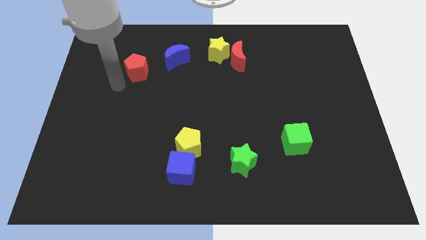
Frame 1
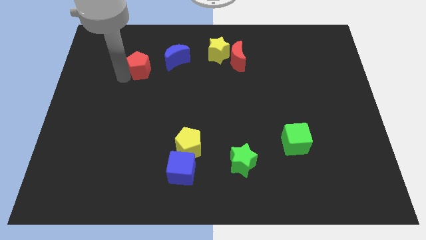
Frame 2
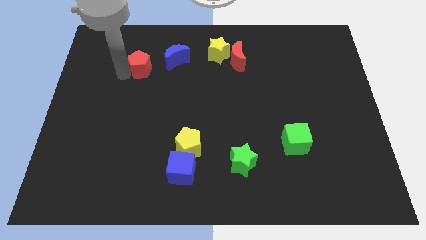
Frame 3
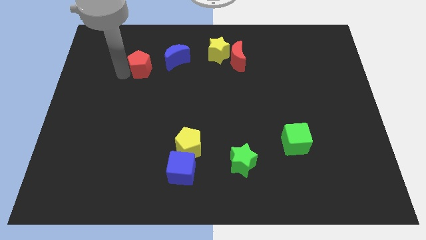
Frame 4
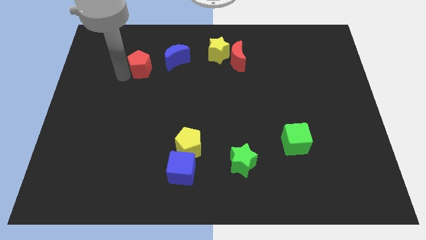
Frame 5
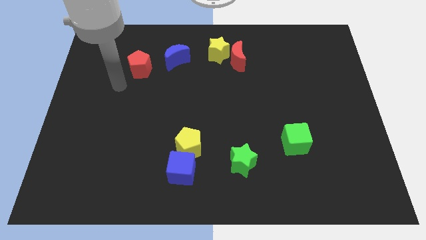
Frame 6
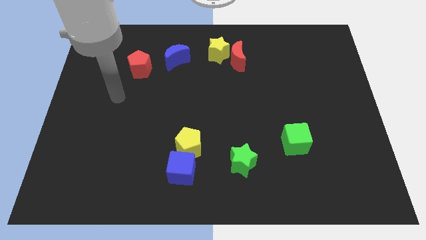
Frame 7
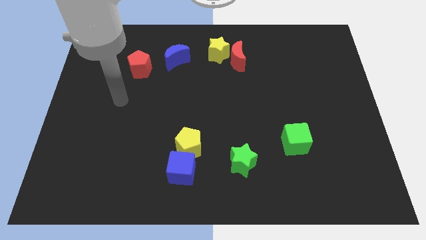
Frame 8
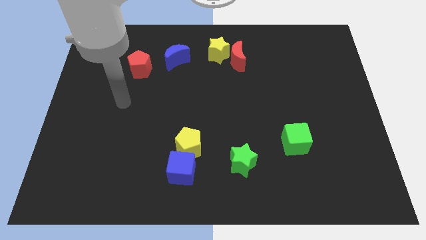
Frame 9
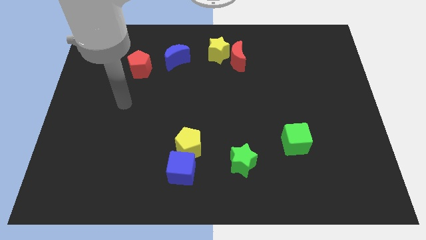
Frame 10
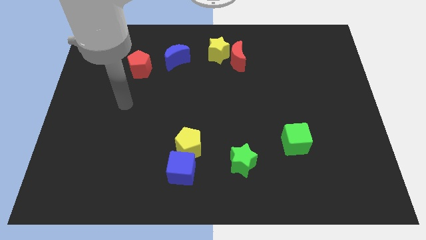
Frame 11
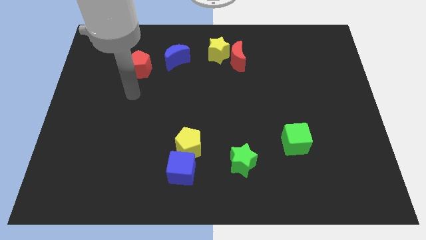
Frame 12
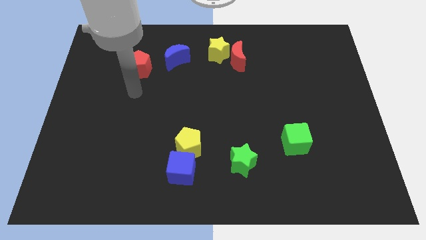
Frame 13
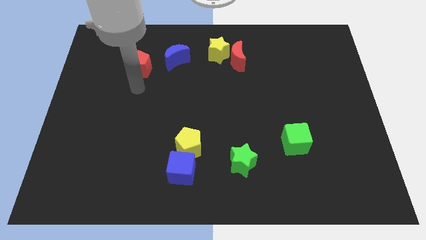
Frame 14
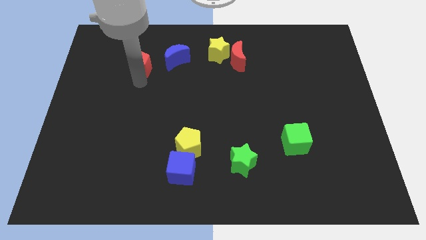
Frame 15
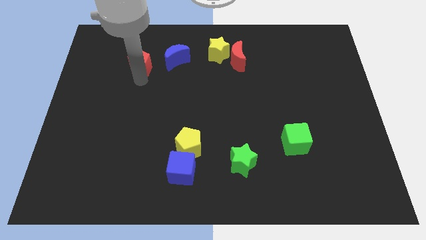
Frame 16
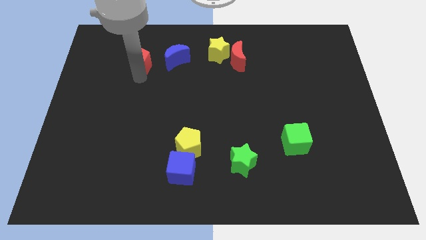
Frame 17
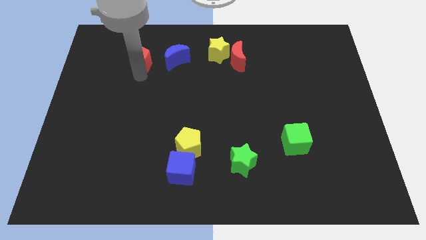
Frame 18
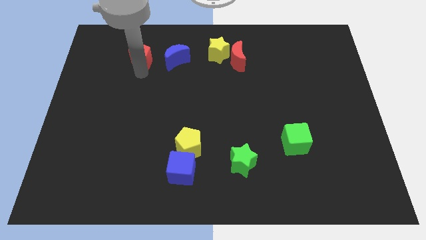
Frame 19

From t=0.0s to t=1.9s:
push the red pentagon left to the blue crescent

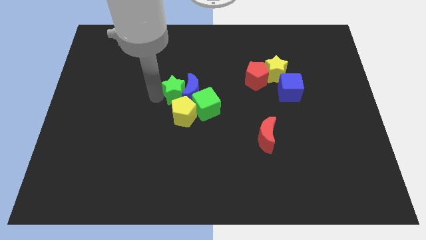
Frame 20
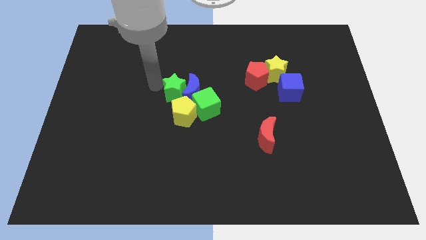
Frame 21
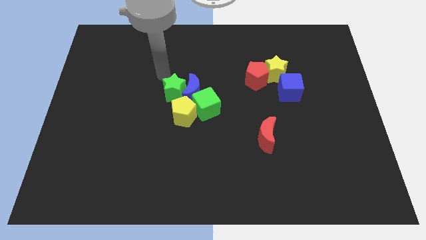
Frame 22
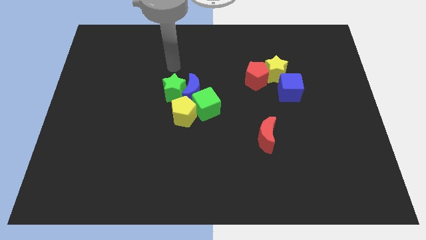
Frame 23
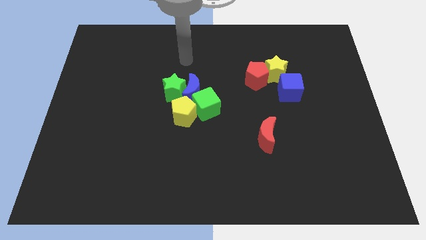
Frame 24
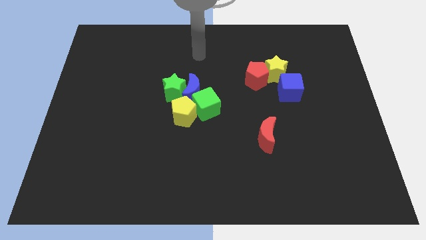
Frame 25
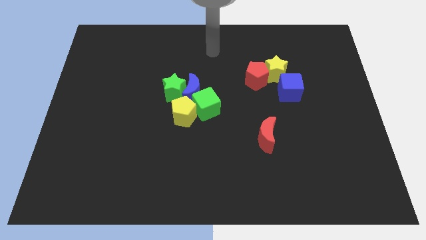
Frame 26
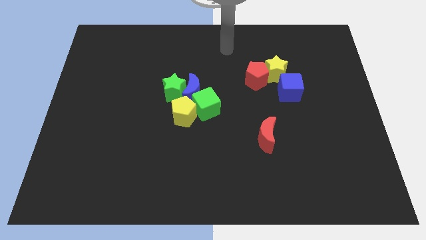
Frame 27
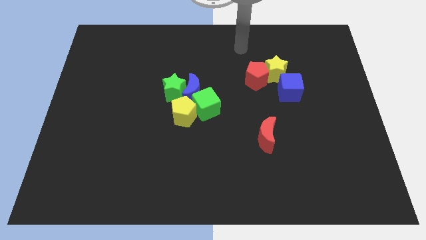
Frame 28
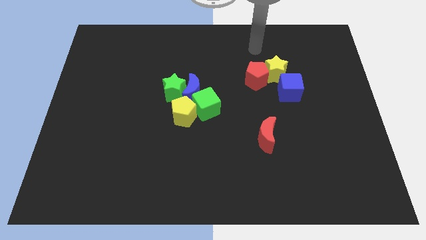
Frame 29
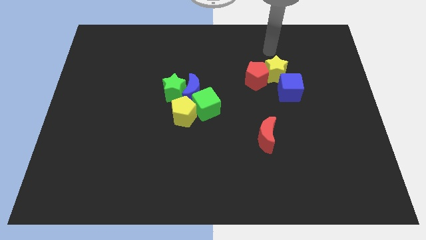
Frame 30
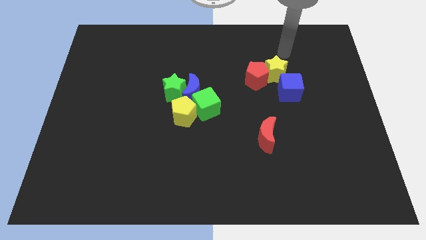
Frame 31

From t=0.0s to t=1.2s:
place your arm above the yellow star

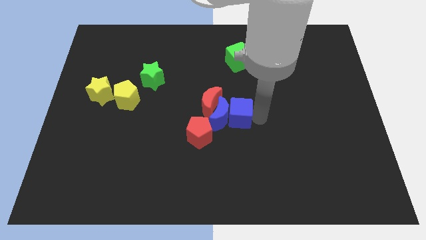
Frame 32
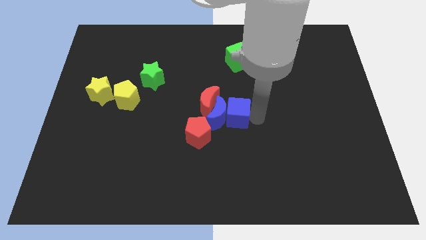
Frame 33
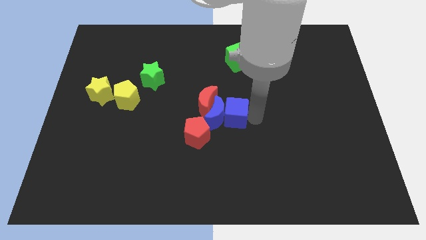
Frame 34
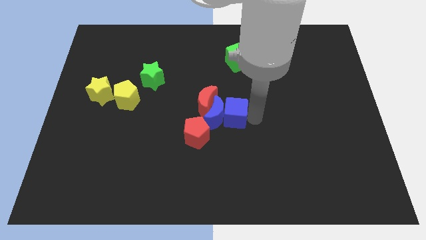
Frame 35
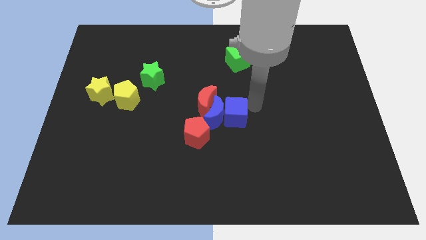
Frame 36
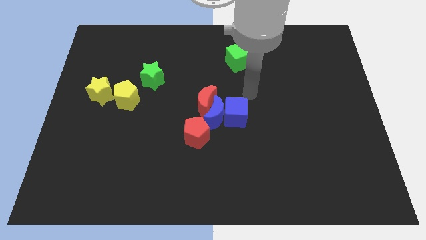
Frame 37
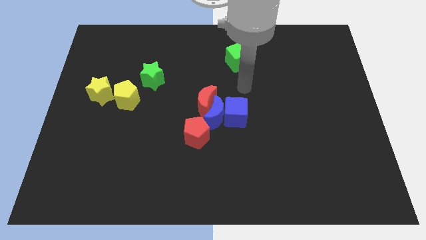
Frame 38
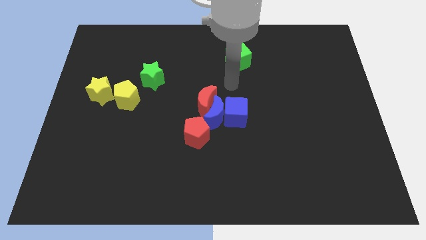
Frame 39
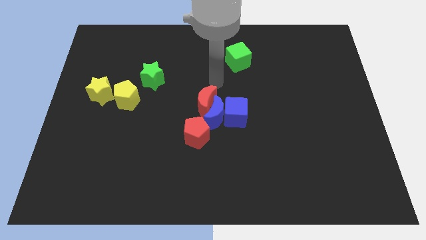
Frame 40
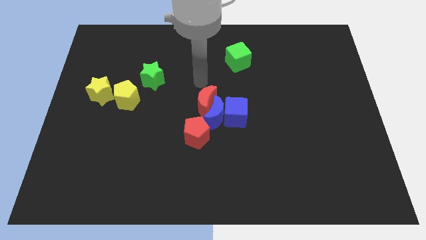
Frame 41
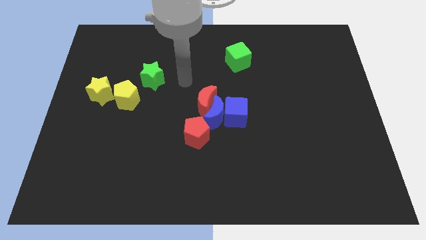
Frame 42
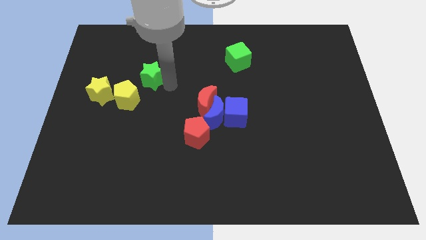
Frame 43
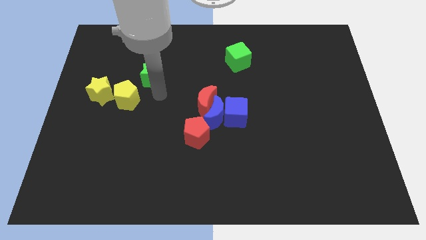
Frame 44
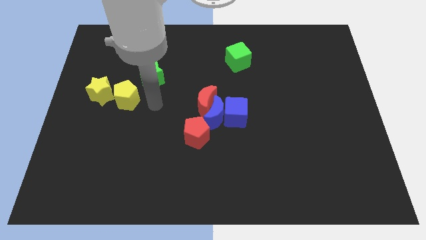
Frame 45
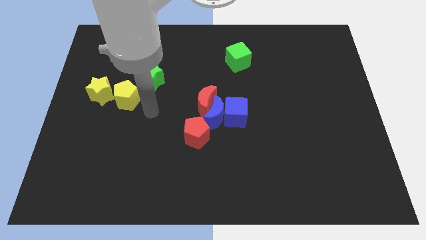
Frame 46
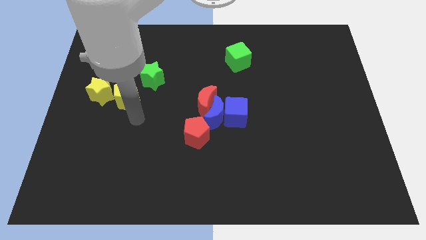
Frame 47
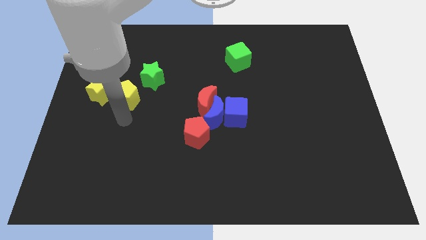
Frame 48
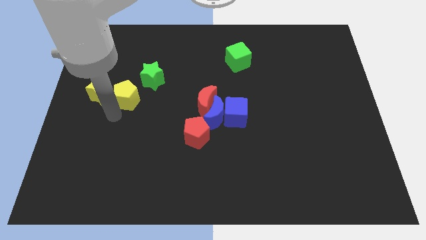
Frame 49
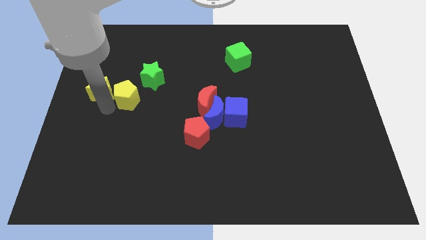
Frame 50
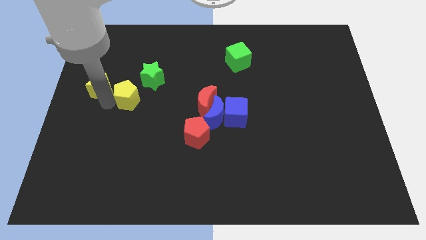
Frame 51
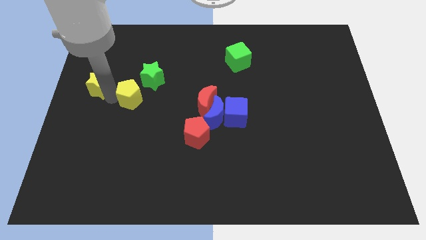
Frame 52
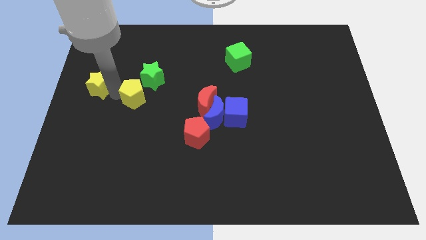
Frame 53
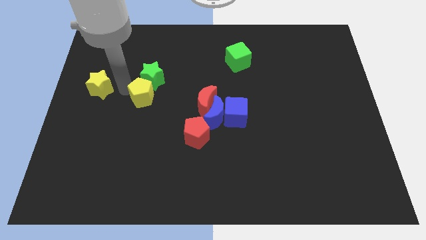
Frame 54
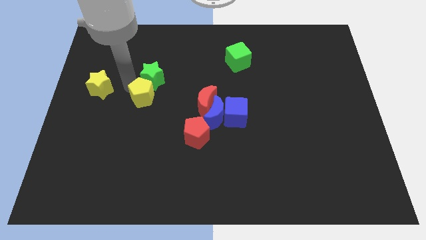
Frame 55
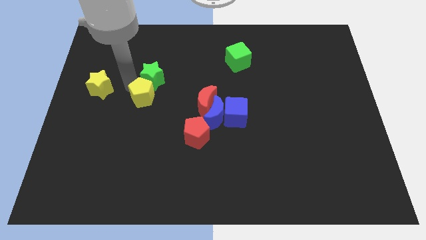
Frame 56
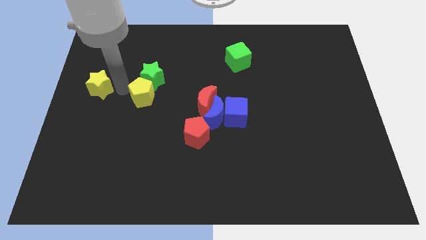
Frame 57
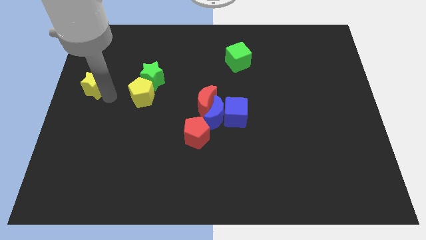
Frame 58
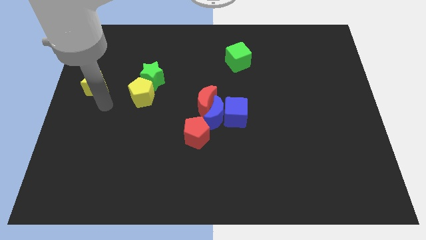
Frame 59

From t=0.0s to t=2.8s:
place the yellow pentagon diagonally top left to the red pentagon

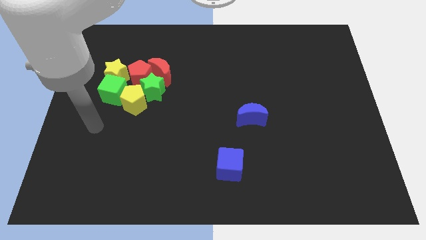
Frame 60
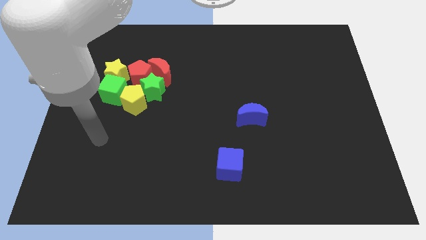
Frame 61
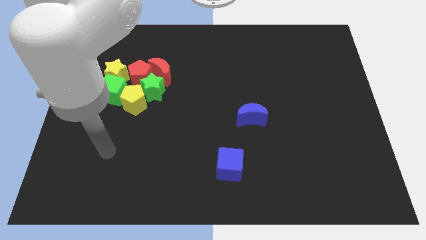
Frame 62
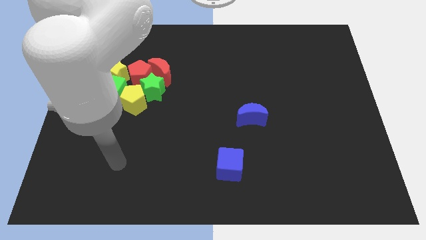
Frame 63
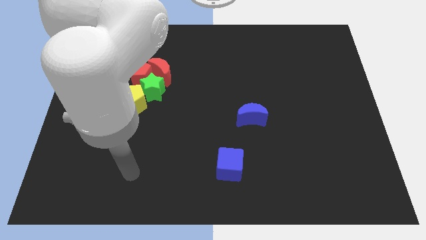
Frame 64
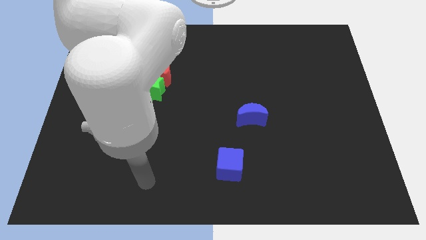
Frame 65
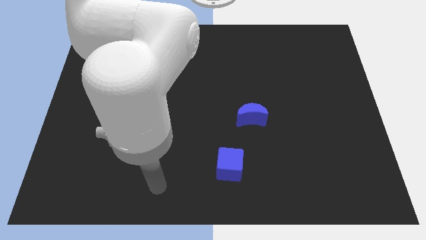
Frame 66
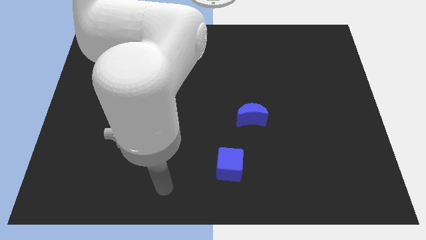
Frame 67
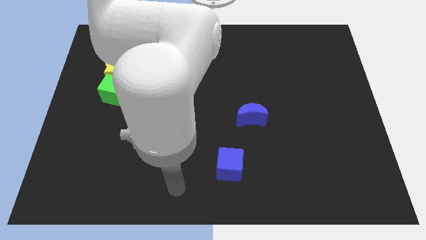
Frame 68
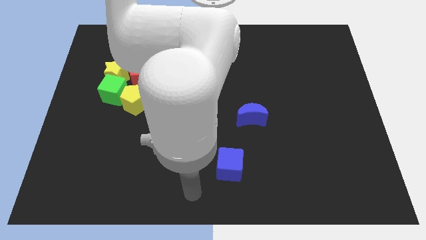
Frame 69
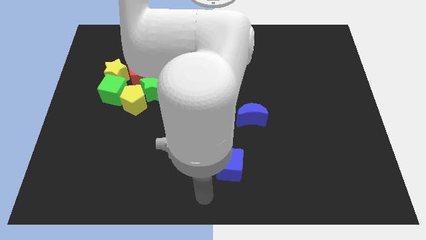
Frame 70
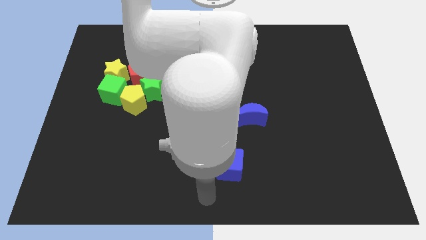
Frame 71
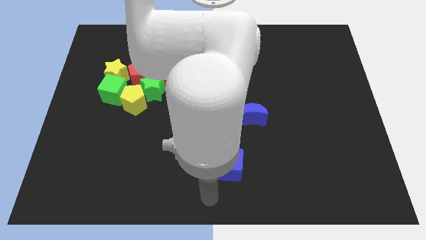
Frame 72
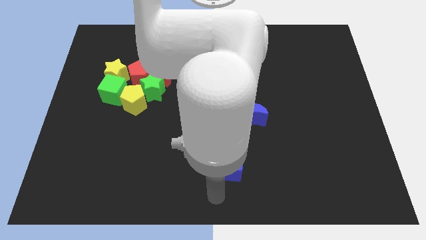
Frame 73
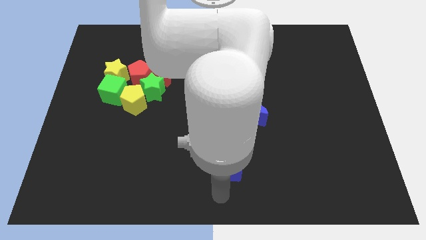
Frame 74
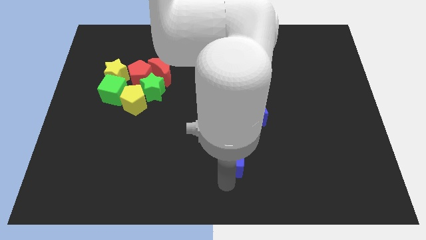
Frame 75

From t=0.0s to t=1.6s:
move the arm towards the down of the blue cube

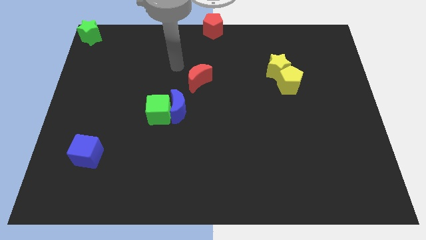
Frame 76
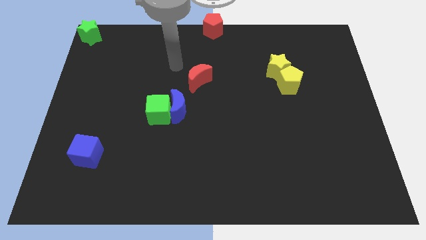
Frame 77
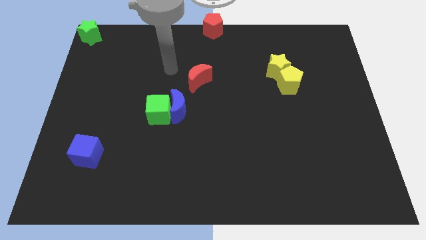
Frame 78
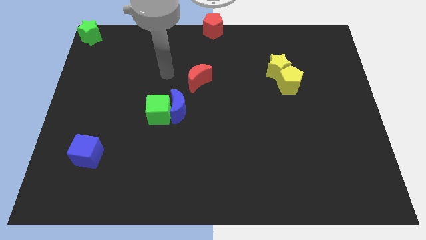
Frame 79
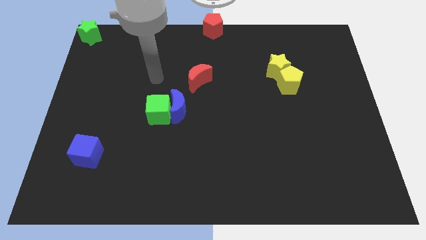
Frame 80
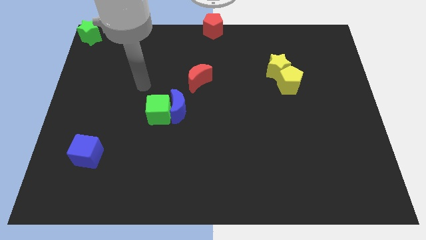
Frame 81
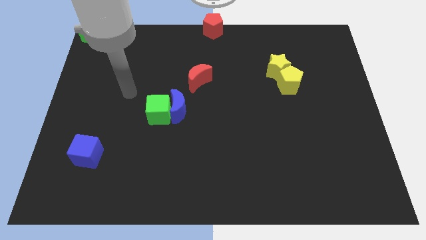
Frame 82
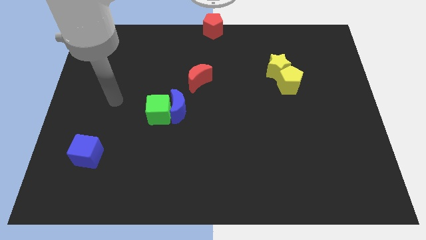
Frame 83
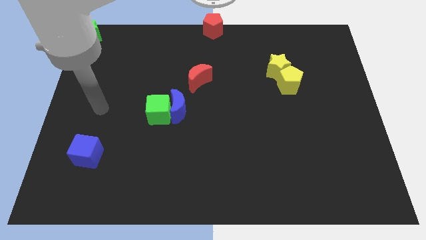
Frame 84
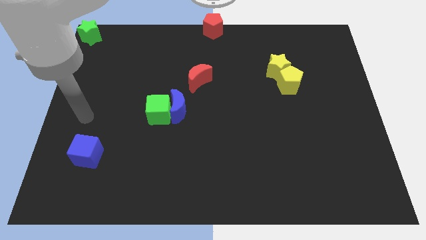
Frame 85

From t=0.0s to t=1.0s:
move the arm diagonally down

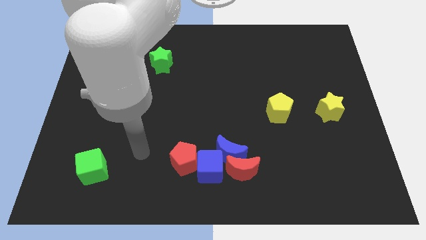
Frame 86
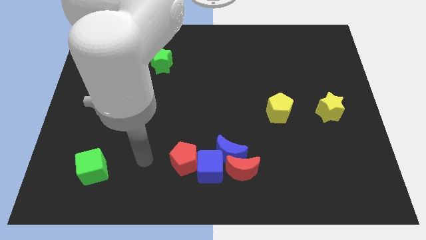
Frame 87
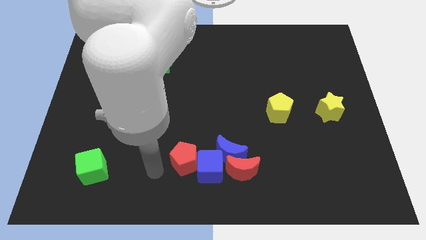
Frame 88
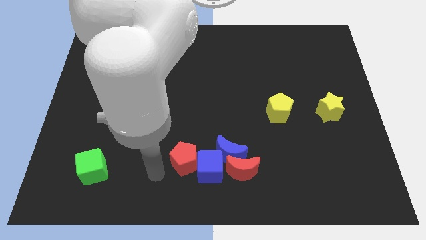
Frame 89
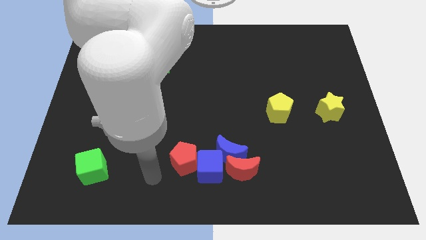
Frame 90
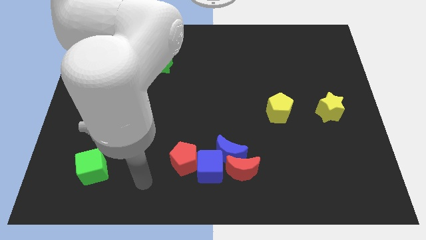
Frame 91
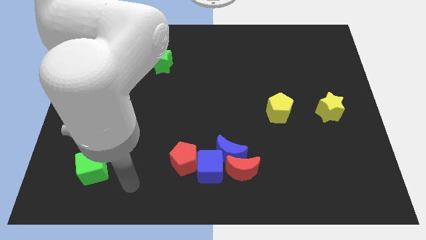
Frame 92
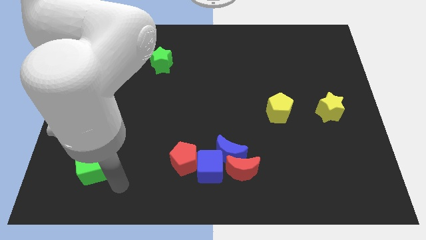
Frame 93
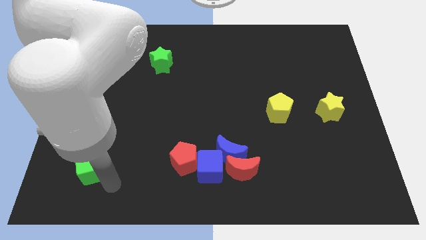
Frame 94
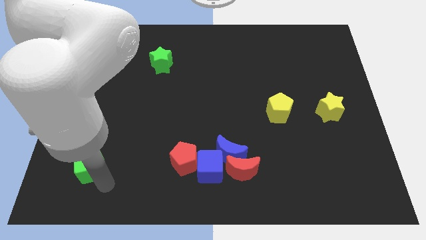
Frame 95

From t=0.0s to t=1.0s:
place your arm below green cube
